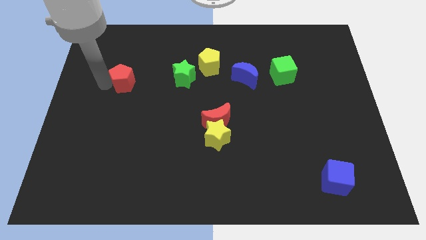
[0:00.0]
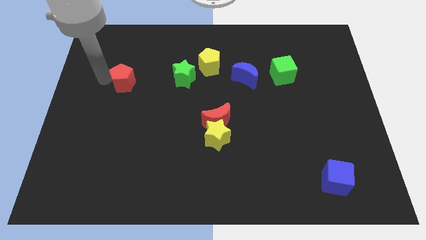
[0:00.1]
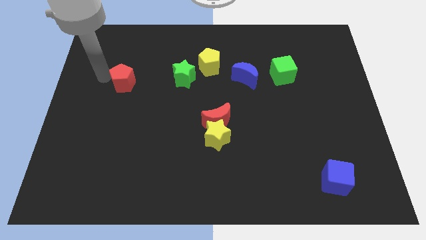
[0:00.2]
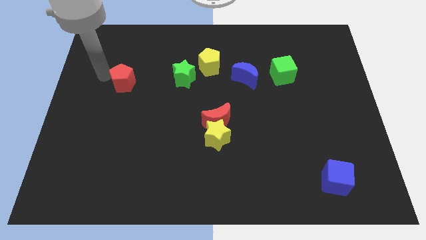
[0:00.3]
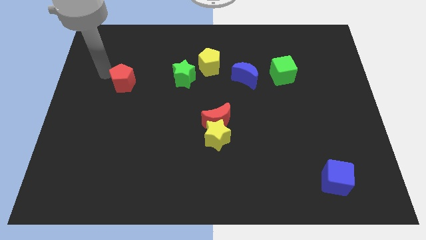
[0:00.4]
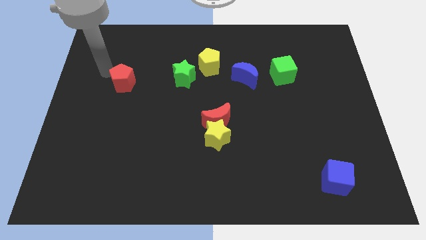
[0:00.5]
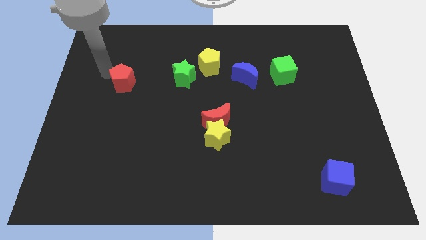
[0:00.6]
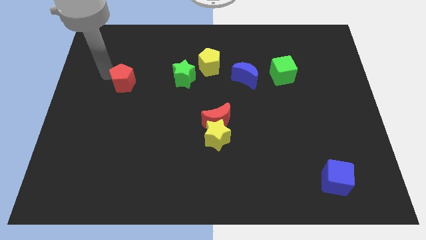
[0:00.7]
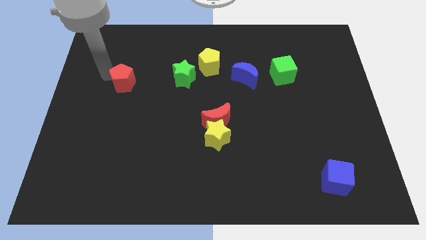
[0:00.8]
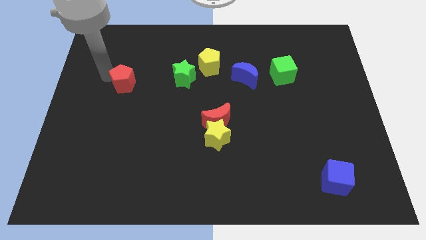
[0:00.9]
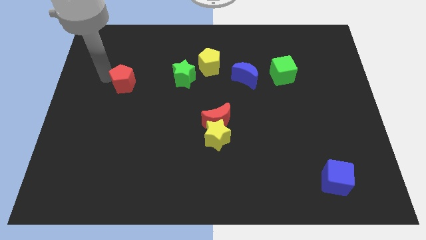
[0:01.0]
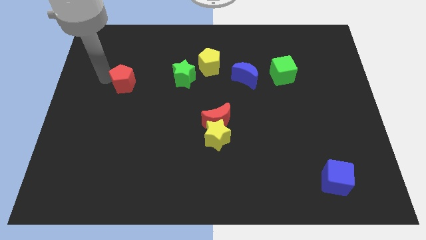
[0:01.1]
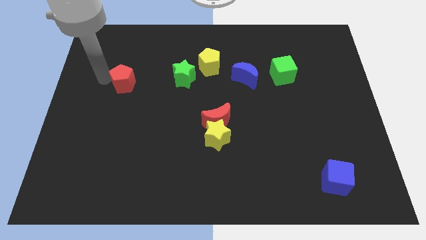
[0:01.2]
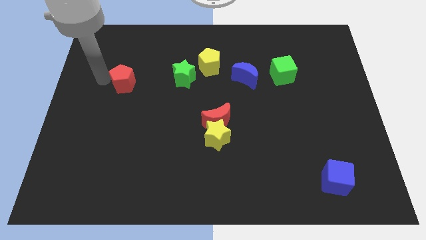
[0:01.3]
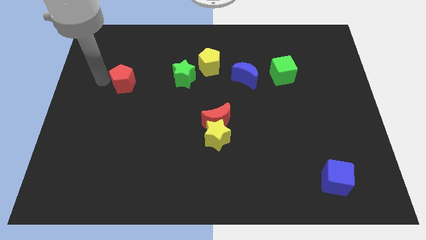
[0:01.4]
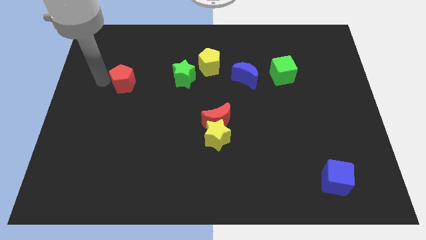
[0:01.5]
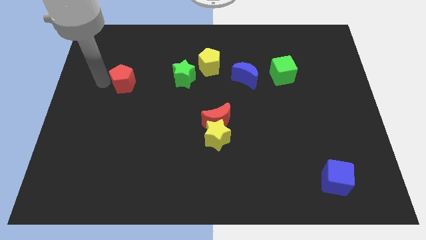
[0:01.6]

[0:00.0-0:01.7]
move the red pentagon close to the green star

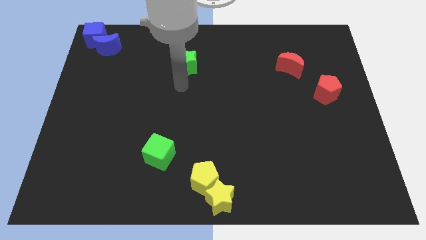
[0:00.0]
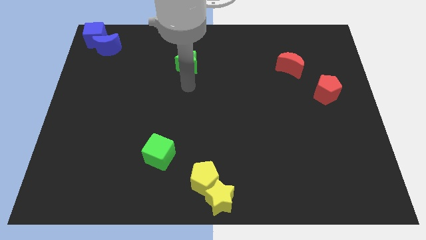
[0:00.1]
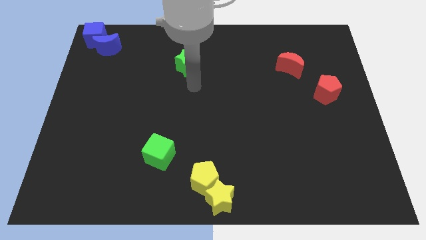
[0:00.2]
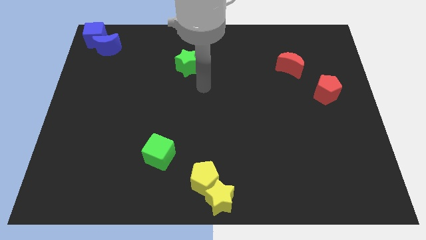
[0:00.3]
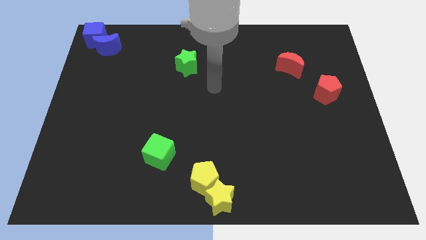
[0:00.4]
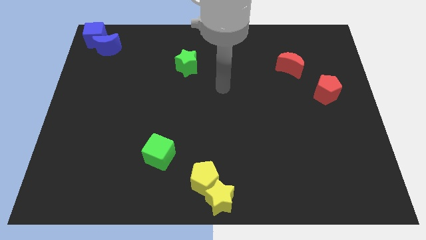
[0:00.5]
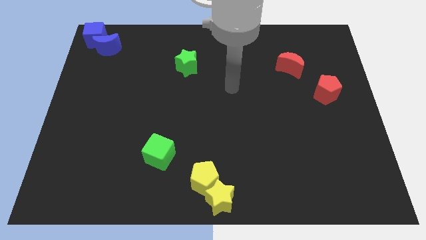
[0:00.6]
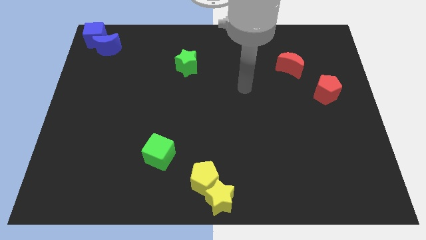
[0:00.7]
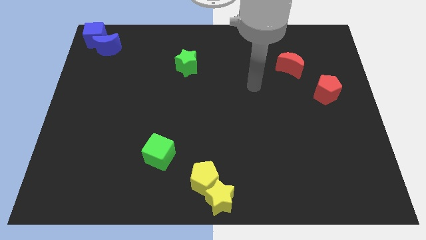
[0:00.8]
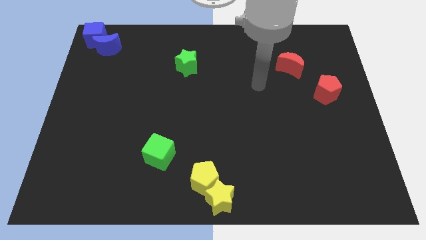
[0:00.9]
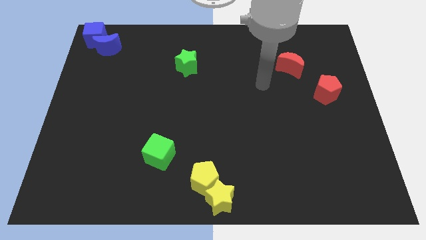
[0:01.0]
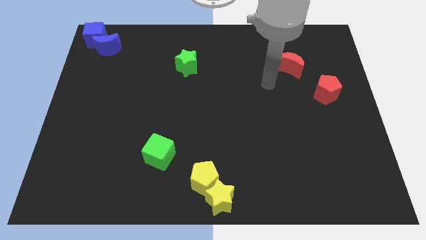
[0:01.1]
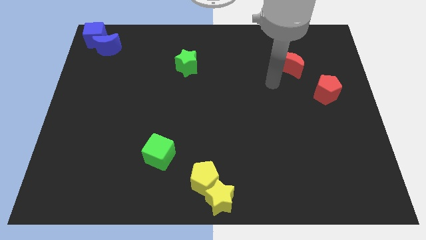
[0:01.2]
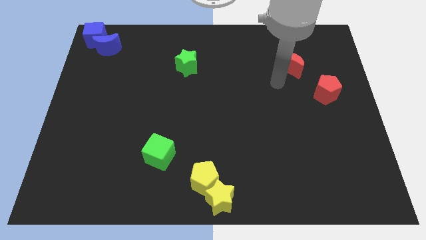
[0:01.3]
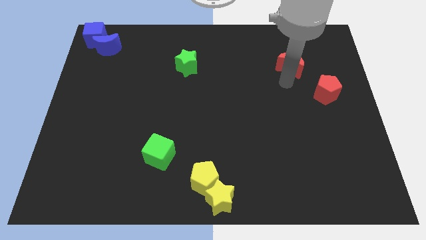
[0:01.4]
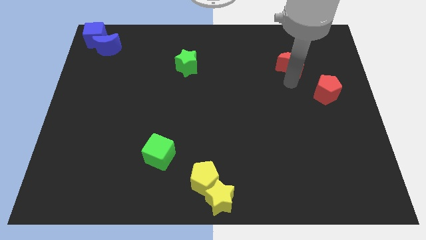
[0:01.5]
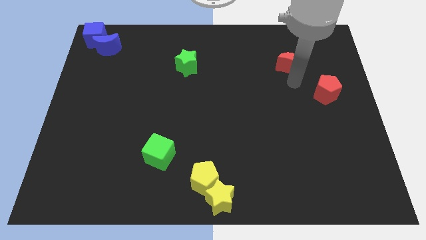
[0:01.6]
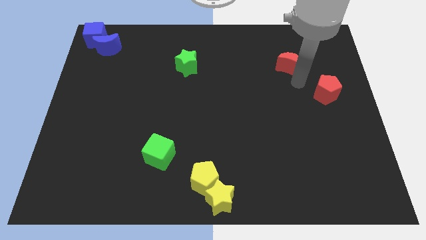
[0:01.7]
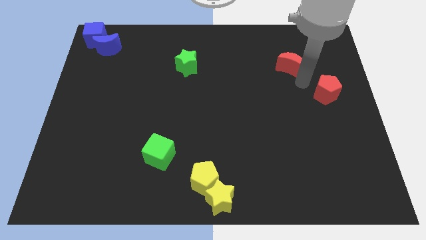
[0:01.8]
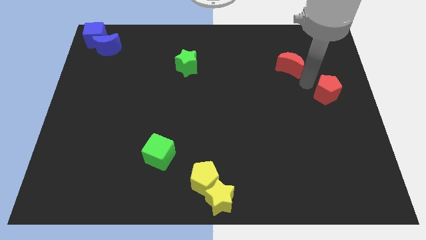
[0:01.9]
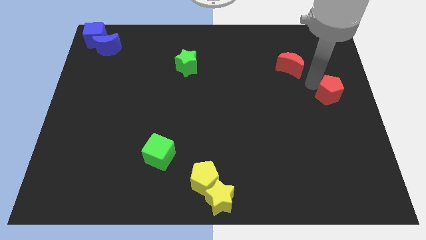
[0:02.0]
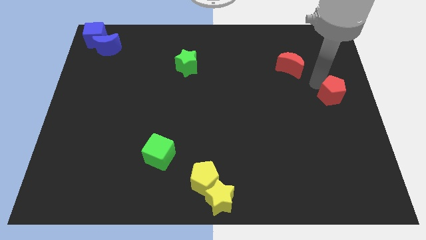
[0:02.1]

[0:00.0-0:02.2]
touch the red pentagon on top left

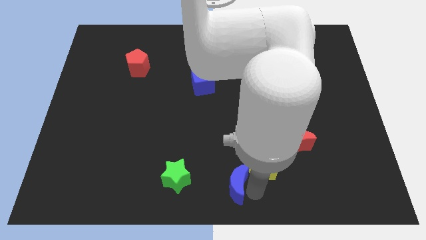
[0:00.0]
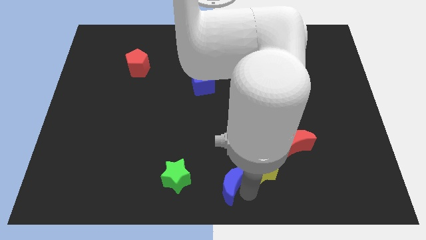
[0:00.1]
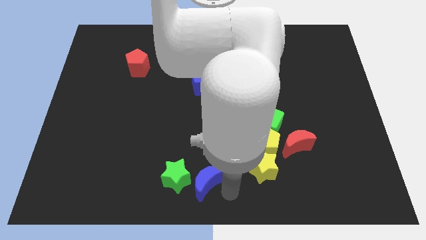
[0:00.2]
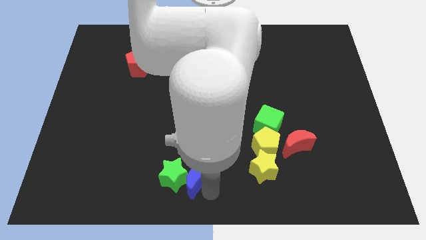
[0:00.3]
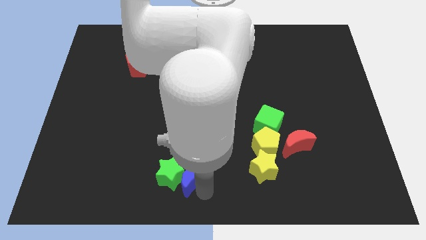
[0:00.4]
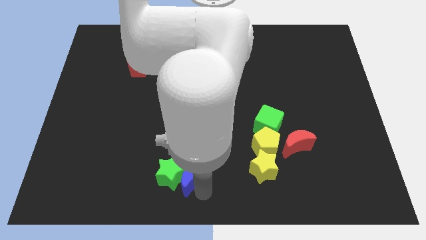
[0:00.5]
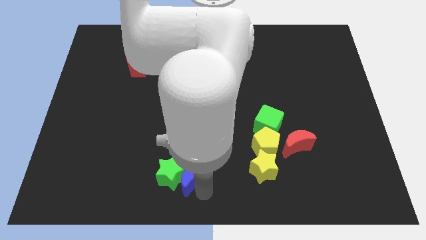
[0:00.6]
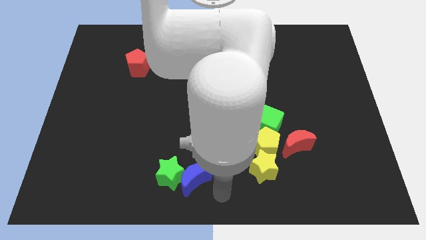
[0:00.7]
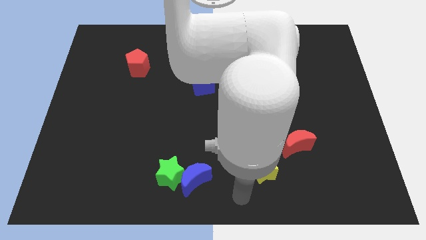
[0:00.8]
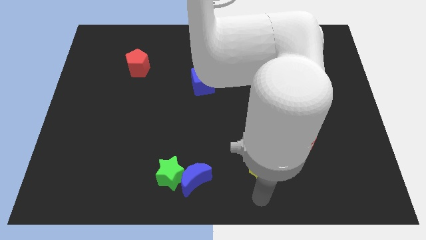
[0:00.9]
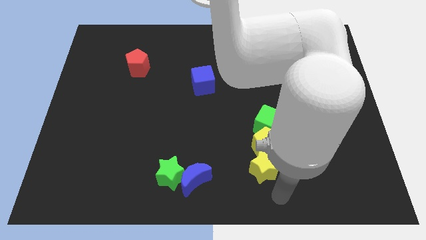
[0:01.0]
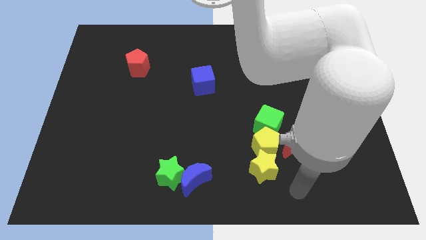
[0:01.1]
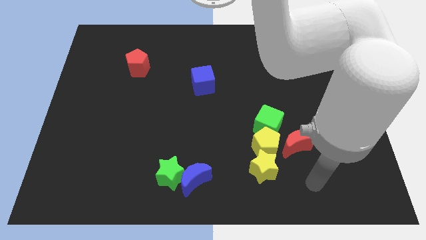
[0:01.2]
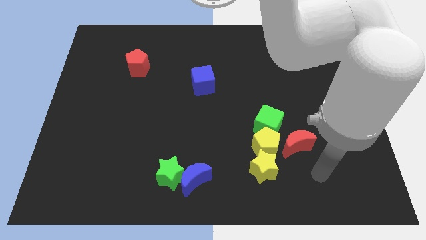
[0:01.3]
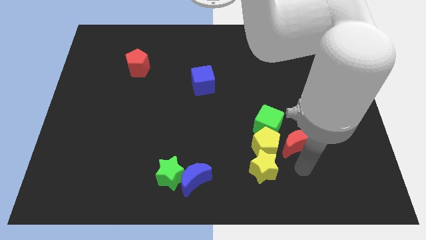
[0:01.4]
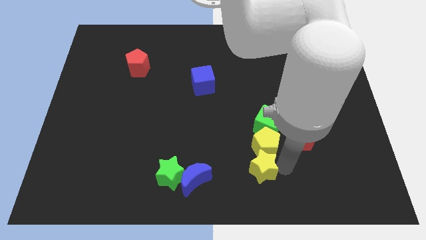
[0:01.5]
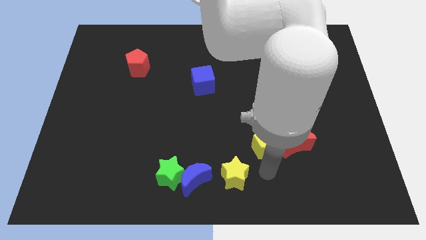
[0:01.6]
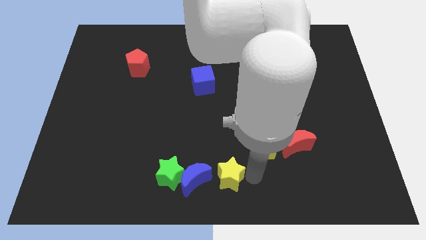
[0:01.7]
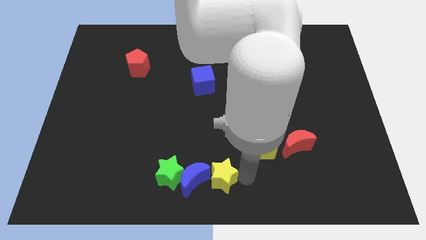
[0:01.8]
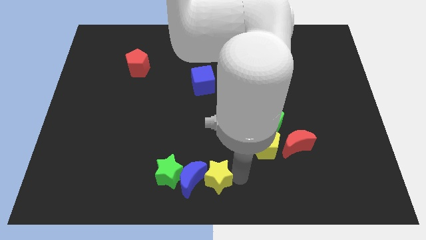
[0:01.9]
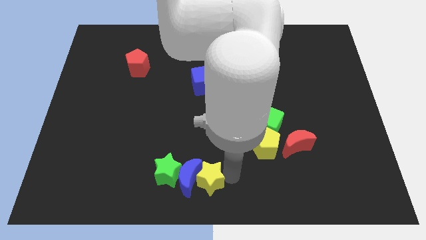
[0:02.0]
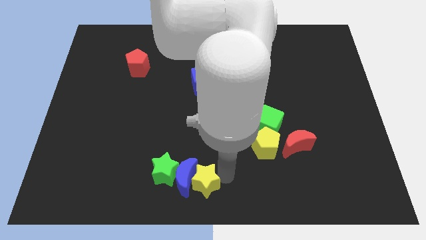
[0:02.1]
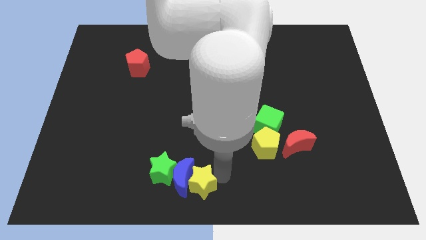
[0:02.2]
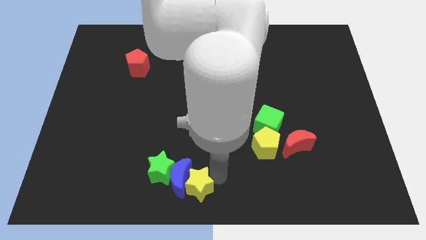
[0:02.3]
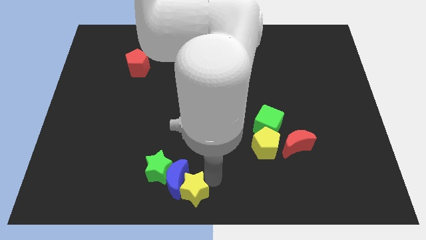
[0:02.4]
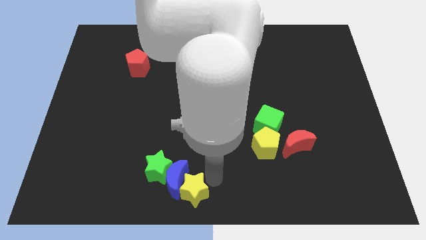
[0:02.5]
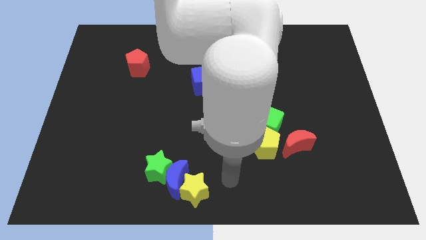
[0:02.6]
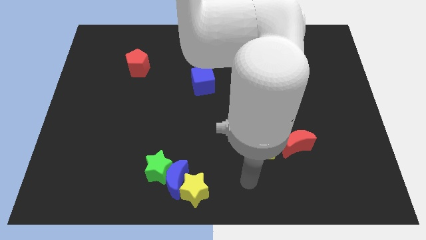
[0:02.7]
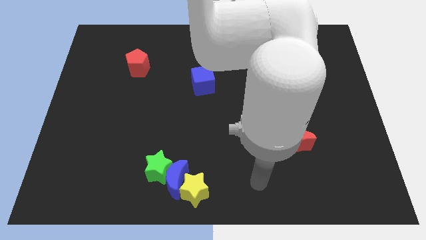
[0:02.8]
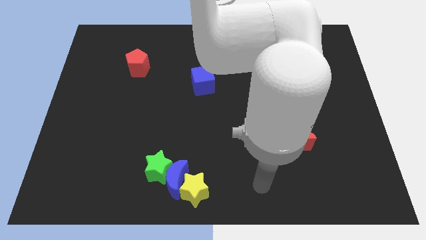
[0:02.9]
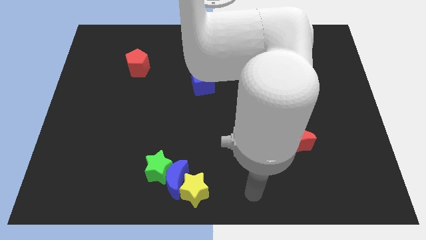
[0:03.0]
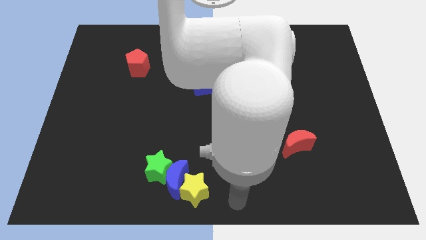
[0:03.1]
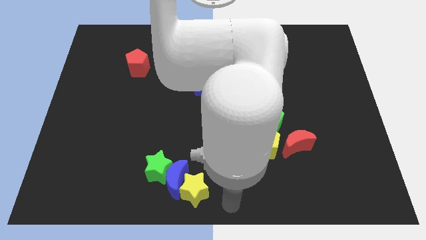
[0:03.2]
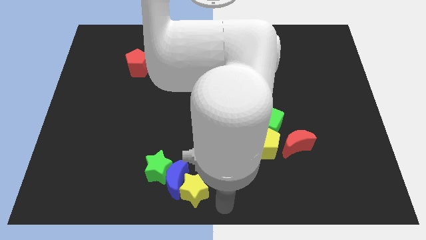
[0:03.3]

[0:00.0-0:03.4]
push the yellow star and blue moon to the bottom right side of the green star

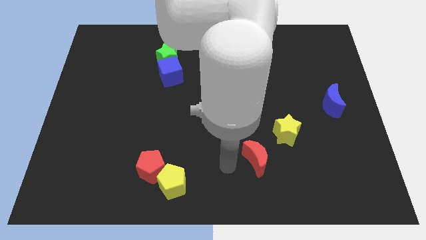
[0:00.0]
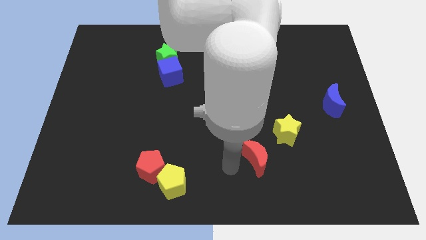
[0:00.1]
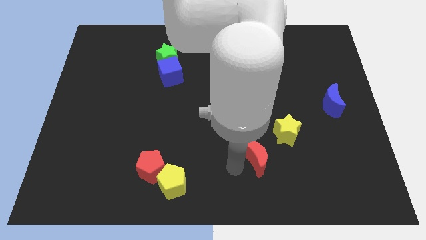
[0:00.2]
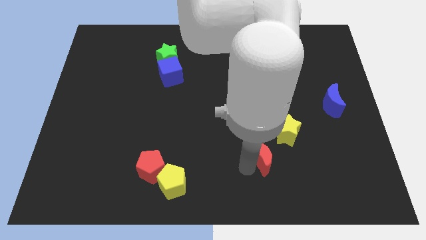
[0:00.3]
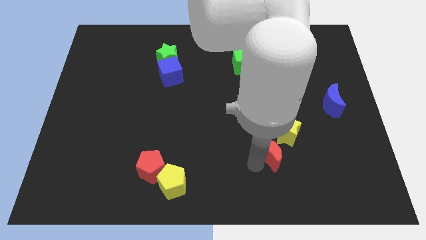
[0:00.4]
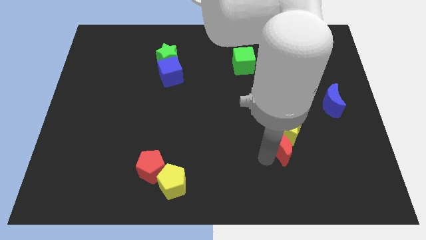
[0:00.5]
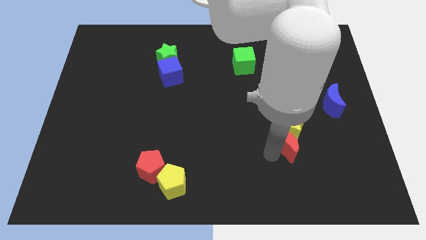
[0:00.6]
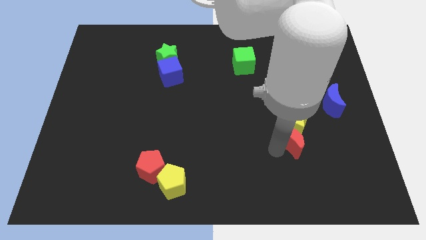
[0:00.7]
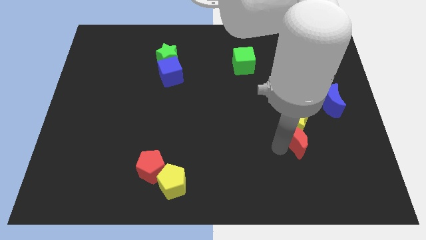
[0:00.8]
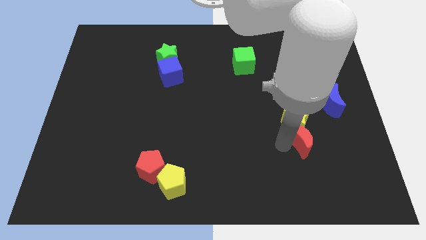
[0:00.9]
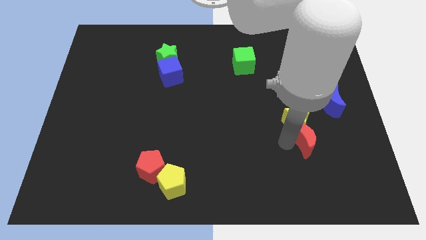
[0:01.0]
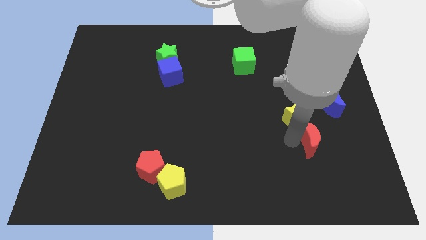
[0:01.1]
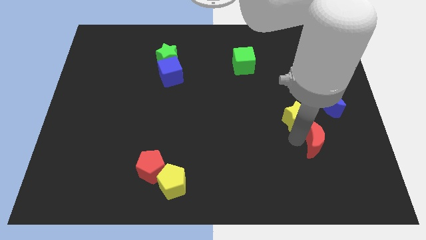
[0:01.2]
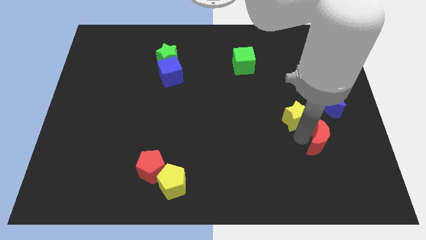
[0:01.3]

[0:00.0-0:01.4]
move the red moon and yellow star towards the blue moon

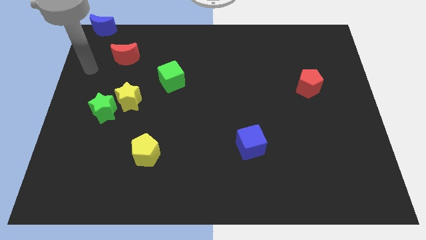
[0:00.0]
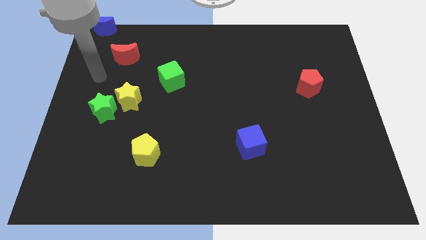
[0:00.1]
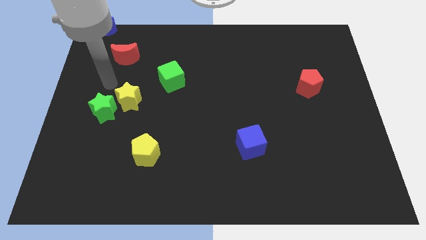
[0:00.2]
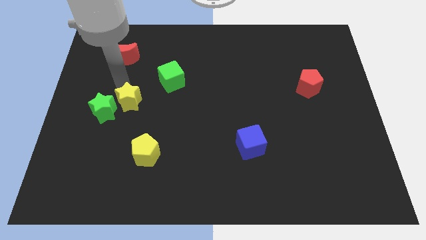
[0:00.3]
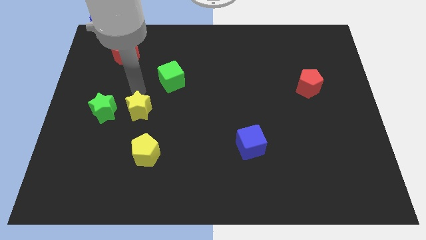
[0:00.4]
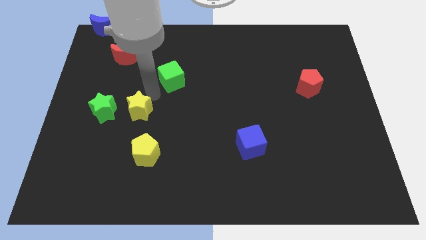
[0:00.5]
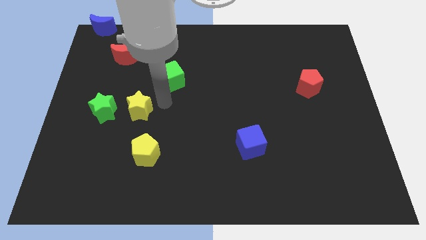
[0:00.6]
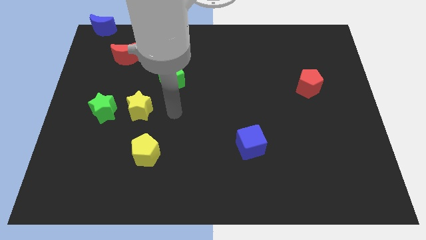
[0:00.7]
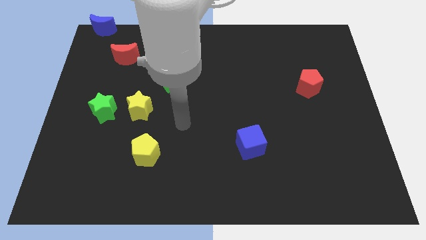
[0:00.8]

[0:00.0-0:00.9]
place yellow star to the right of green star
